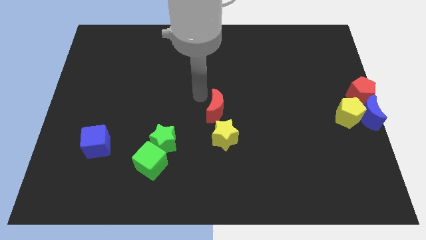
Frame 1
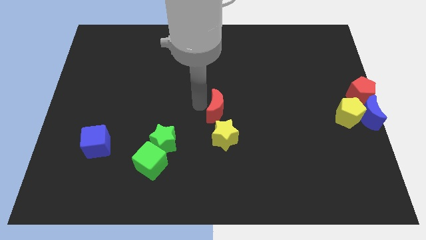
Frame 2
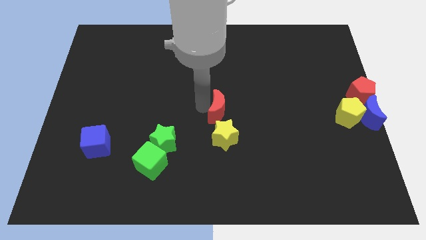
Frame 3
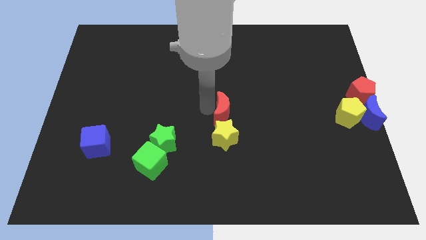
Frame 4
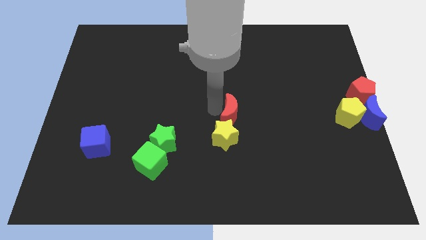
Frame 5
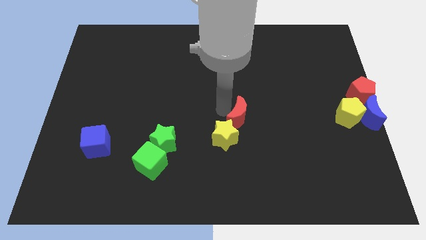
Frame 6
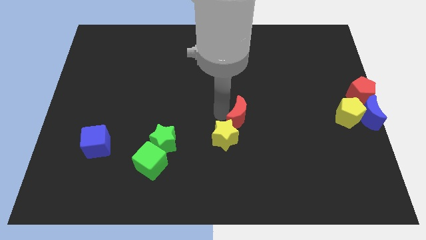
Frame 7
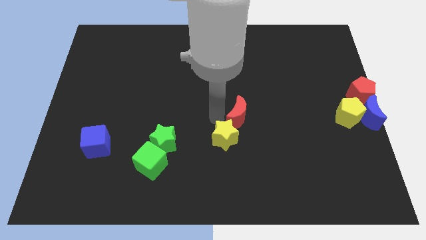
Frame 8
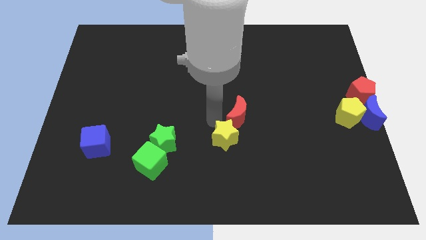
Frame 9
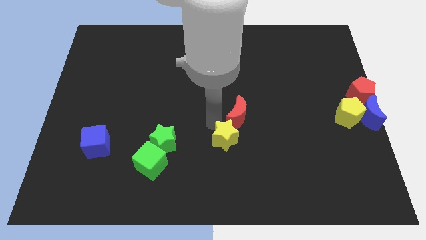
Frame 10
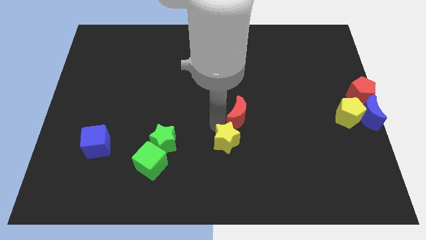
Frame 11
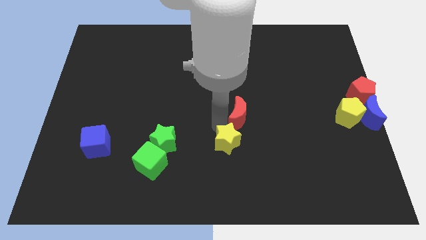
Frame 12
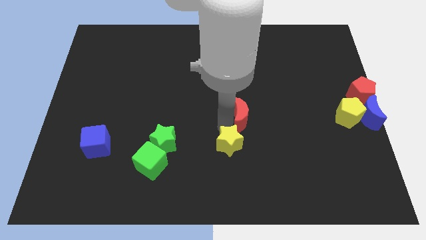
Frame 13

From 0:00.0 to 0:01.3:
push the red crescent on top of the yellow star

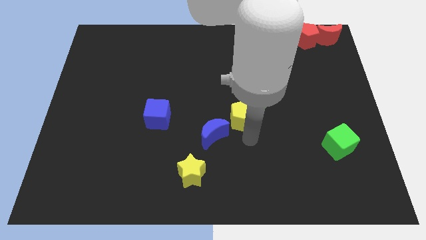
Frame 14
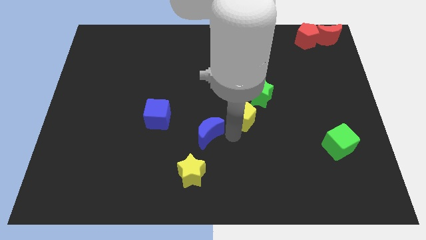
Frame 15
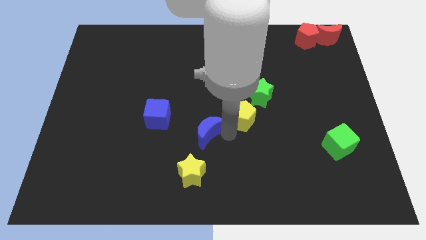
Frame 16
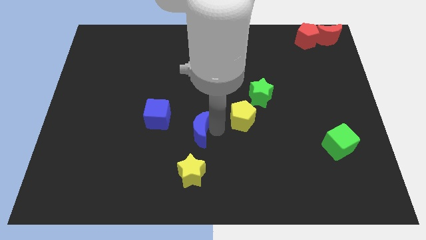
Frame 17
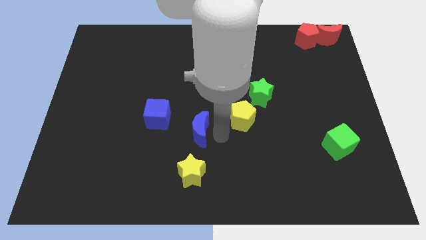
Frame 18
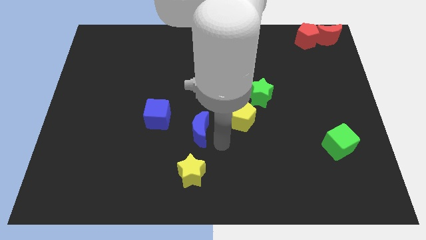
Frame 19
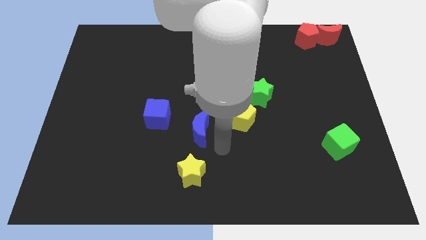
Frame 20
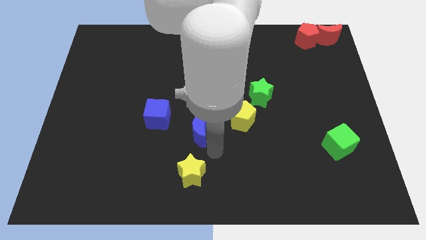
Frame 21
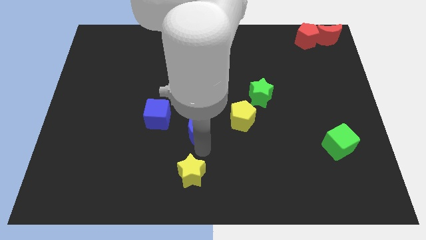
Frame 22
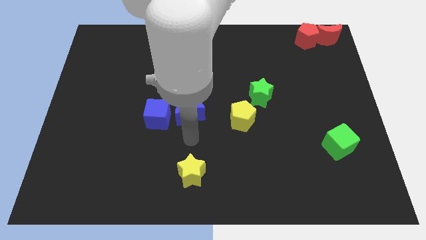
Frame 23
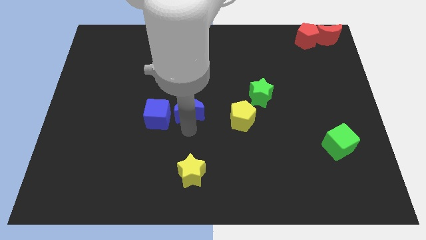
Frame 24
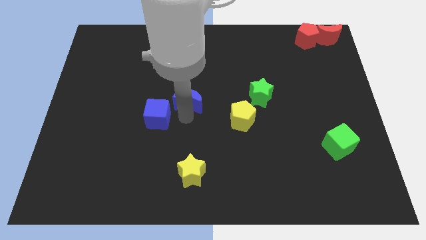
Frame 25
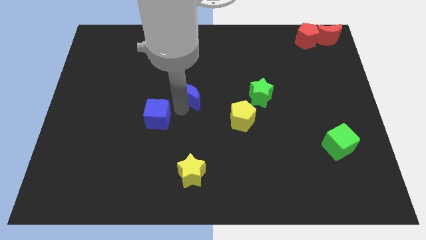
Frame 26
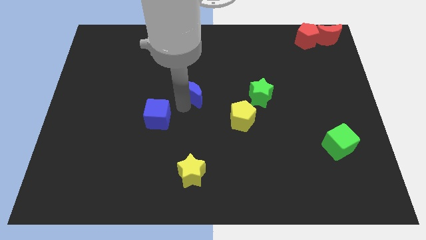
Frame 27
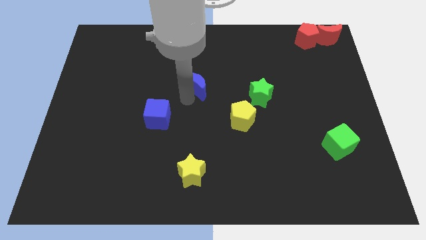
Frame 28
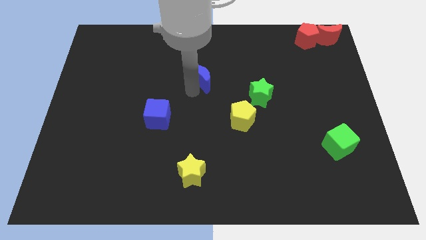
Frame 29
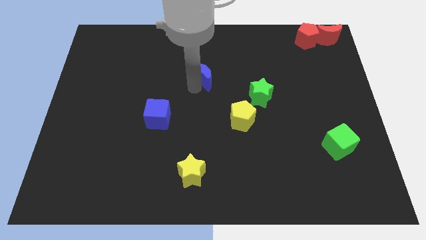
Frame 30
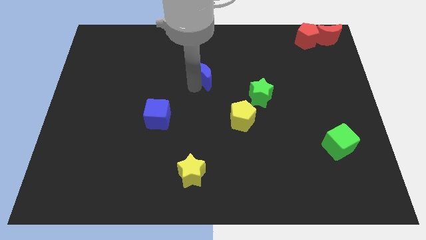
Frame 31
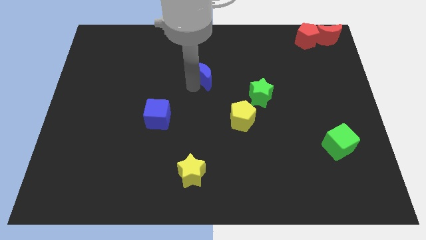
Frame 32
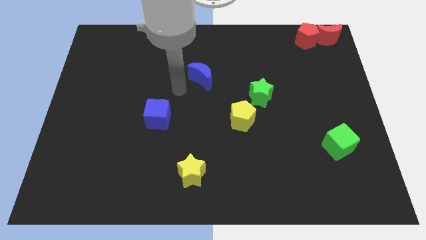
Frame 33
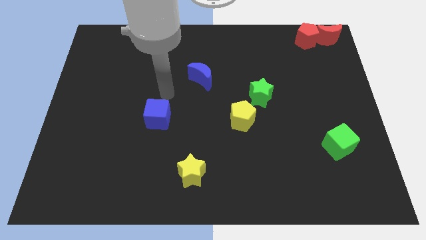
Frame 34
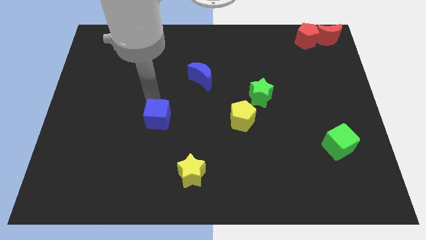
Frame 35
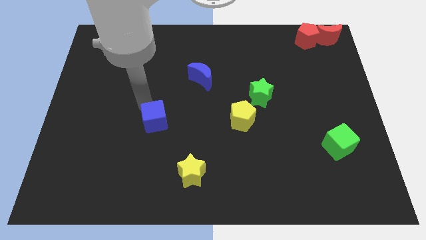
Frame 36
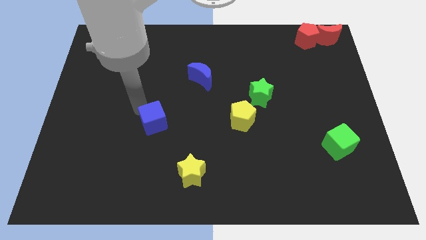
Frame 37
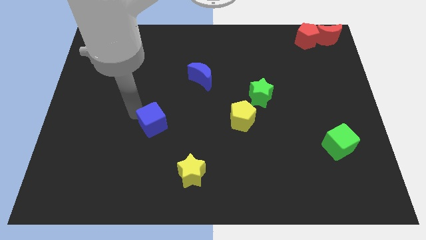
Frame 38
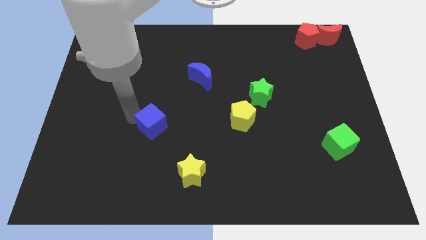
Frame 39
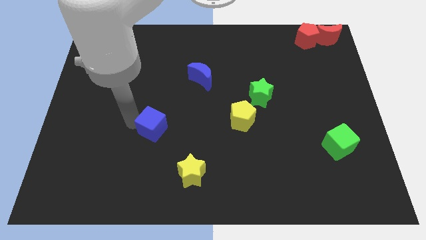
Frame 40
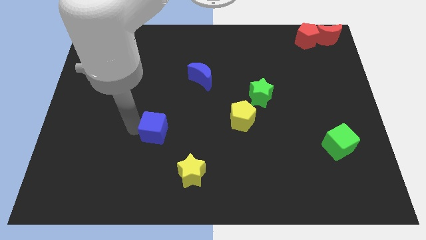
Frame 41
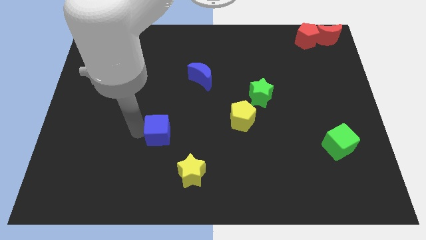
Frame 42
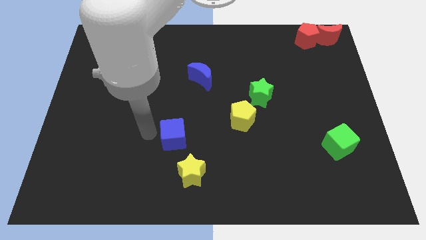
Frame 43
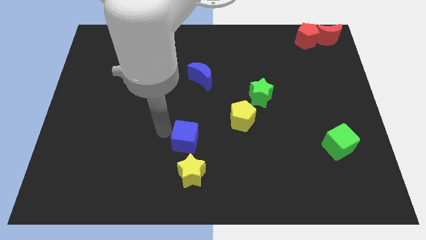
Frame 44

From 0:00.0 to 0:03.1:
move blue moon diagonal to the blue cube

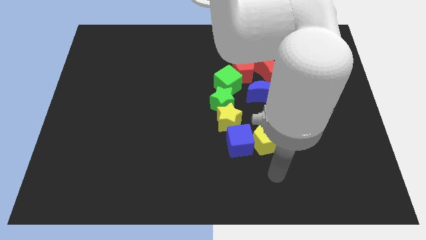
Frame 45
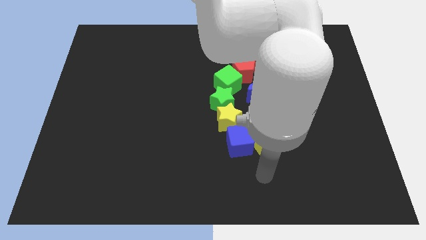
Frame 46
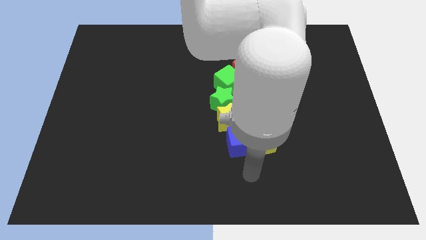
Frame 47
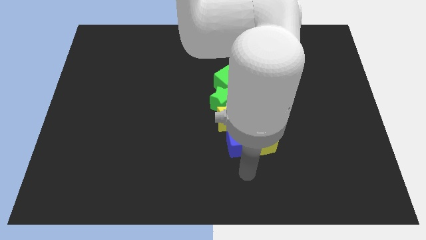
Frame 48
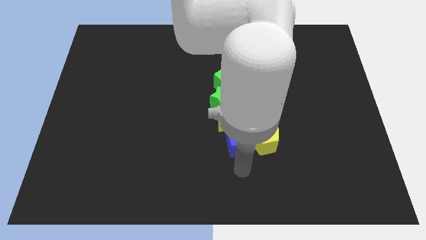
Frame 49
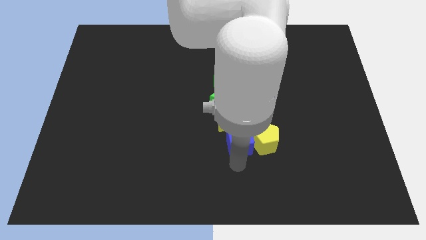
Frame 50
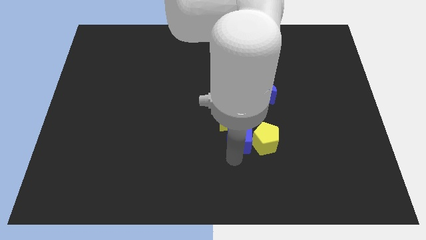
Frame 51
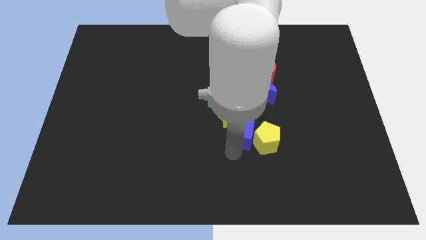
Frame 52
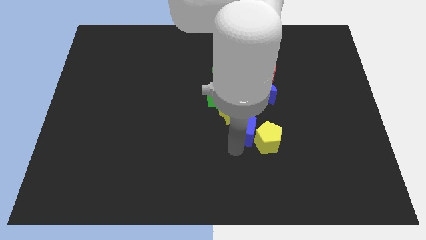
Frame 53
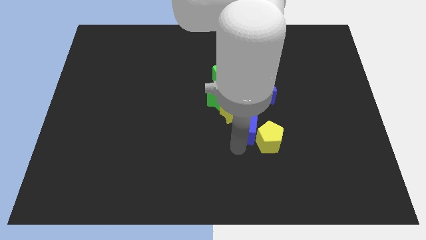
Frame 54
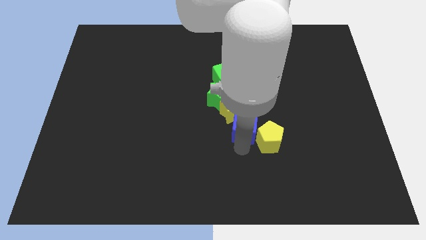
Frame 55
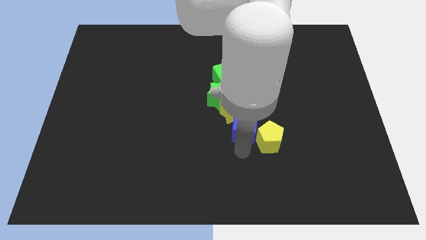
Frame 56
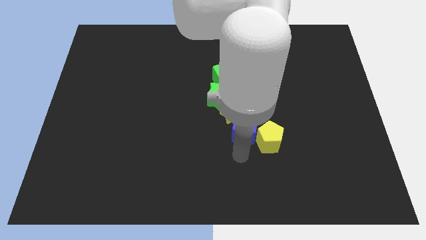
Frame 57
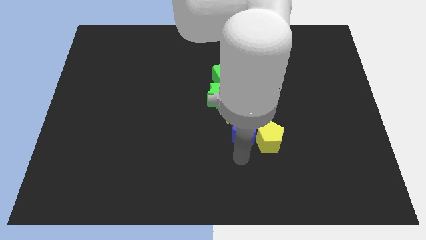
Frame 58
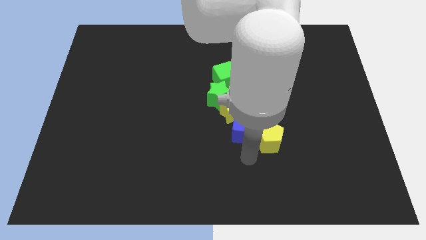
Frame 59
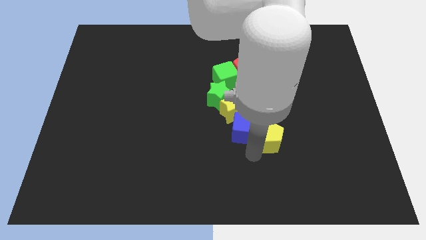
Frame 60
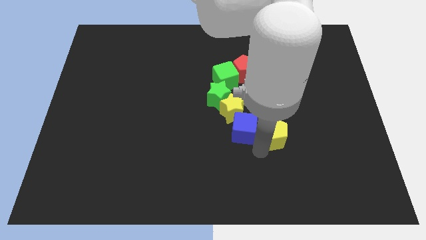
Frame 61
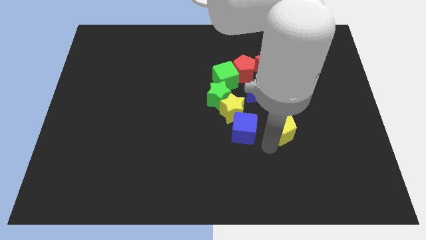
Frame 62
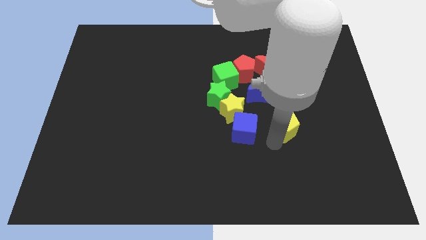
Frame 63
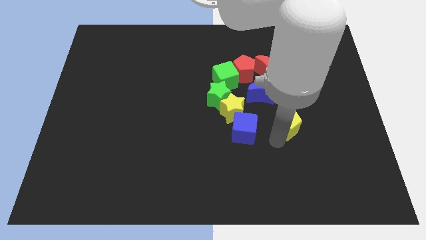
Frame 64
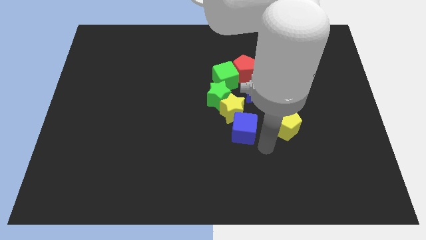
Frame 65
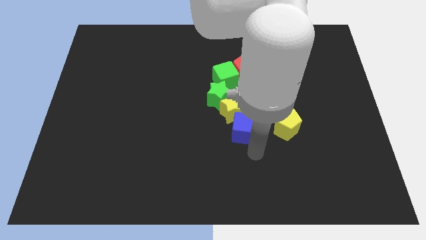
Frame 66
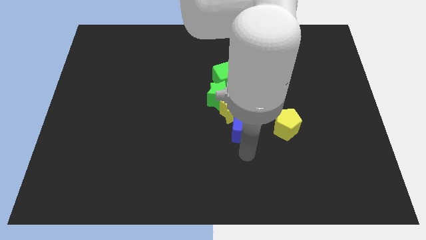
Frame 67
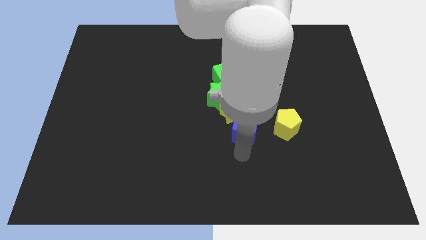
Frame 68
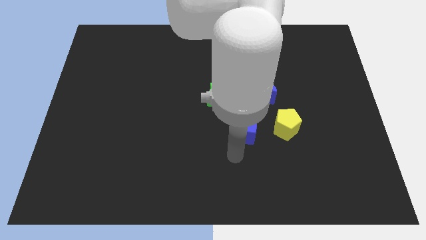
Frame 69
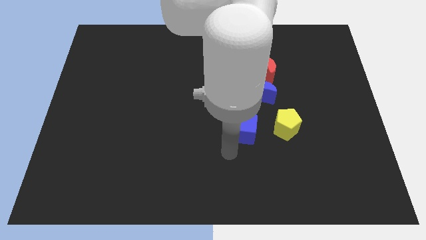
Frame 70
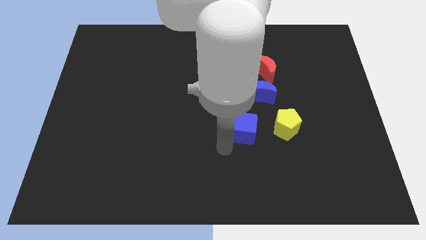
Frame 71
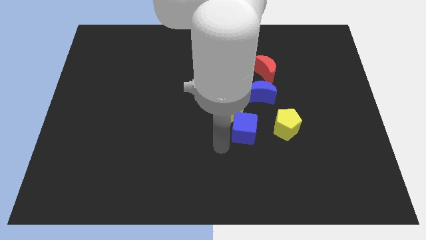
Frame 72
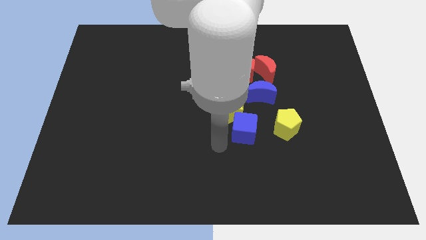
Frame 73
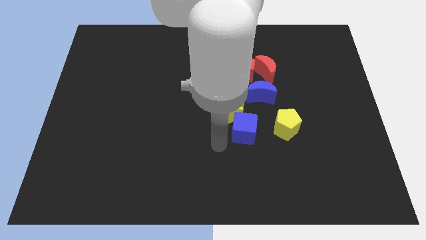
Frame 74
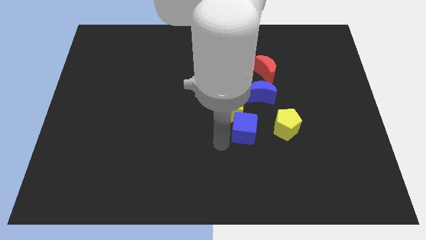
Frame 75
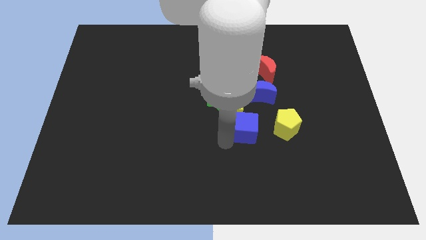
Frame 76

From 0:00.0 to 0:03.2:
separate yellow pentagon from blue cube

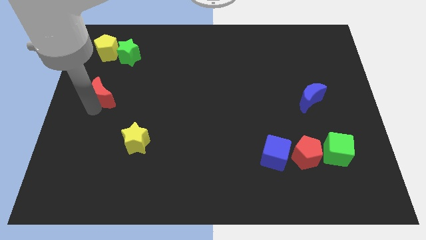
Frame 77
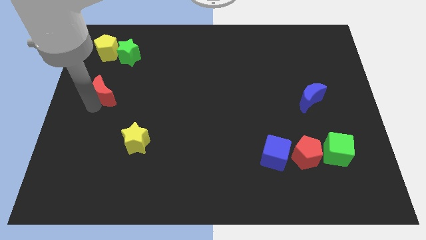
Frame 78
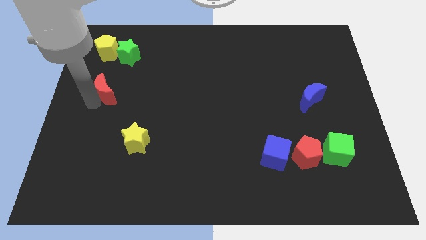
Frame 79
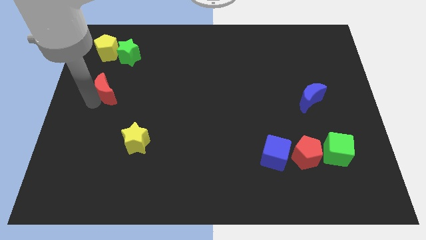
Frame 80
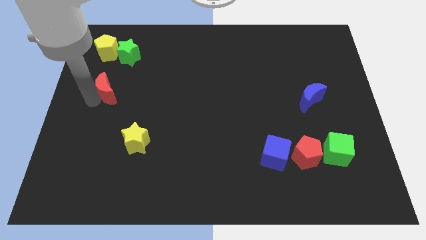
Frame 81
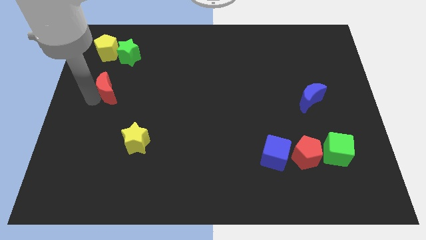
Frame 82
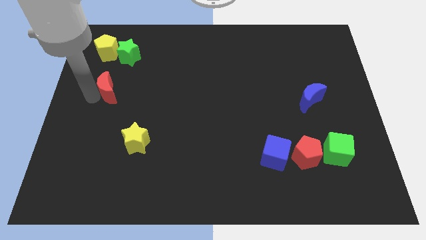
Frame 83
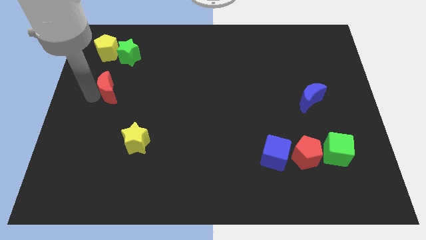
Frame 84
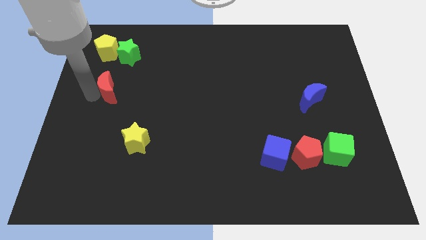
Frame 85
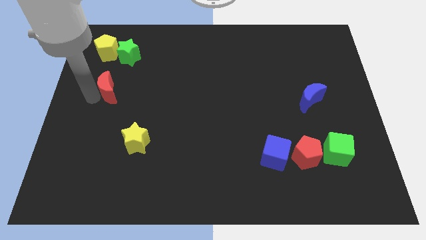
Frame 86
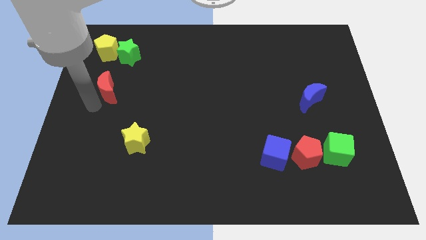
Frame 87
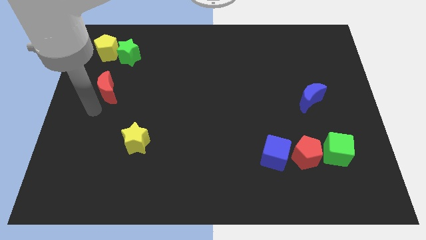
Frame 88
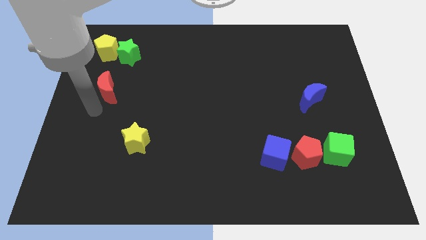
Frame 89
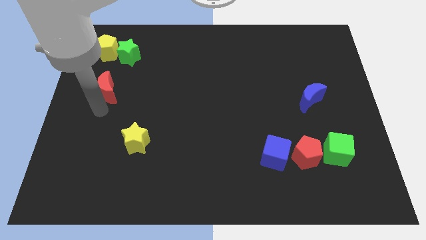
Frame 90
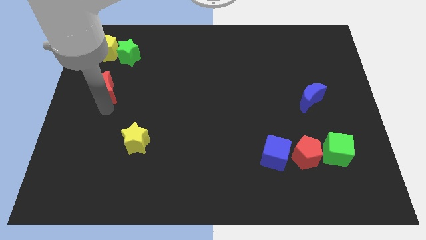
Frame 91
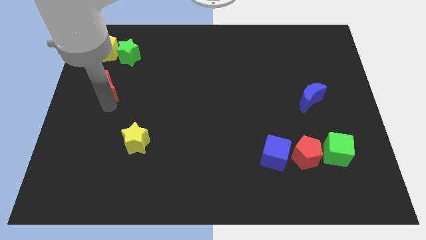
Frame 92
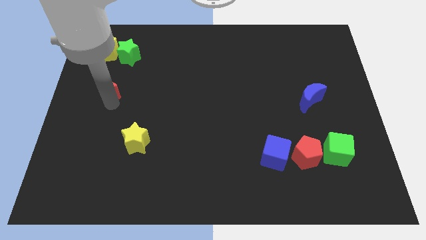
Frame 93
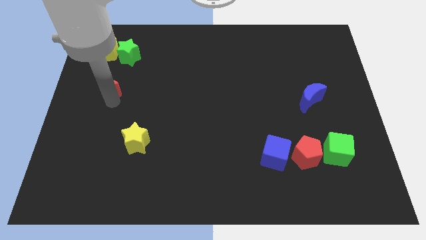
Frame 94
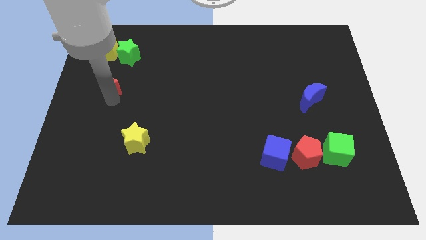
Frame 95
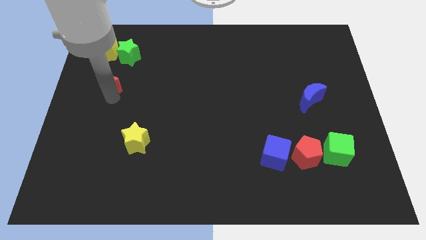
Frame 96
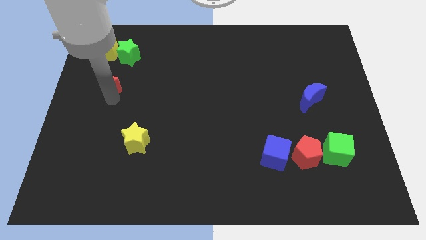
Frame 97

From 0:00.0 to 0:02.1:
move the red crescent towards the yellow pentagon
